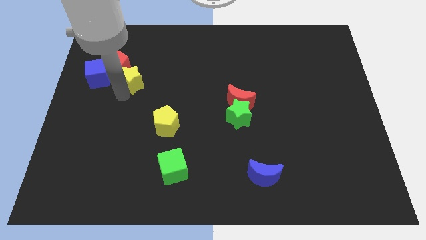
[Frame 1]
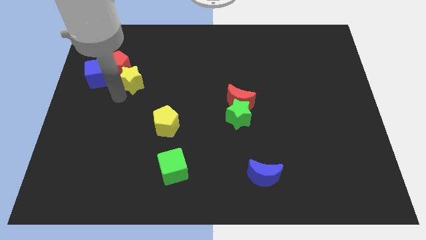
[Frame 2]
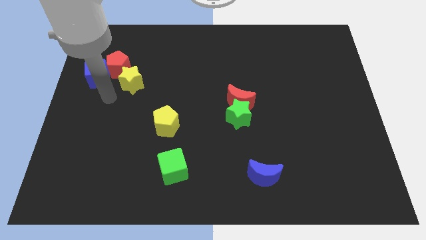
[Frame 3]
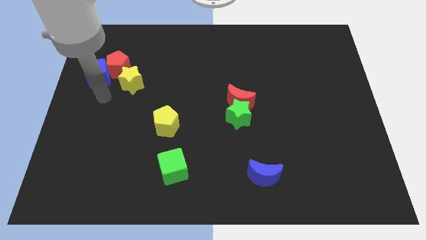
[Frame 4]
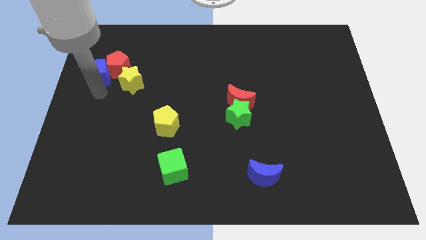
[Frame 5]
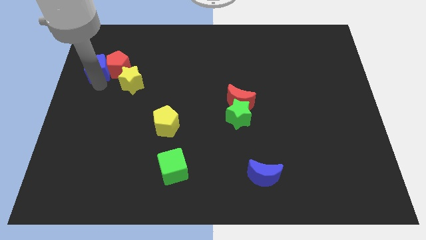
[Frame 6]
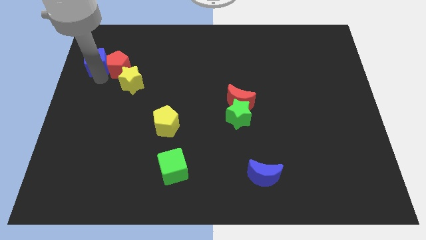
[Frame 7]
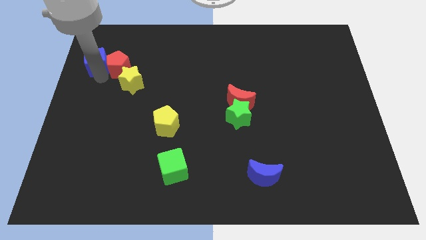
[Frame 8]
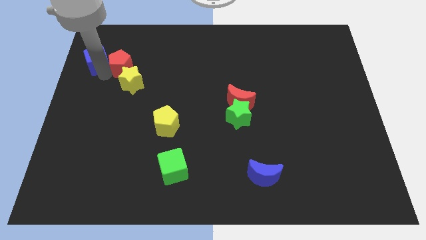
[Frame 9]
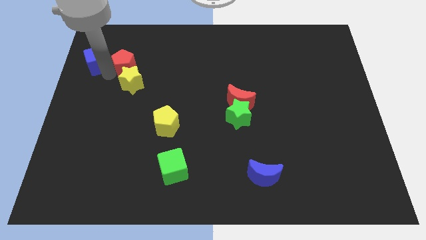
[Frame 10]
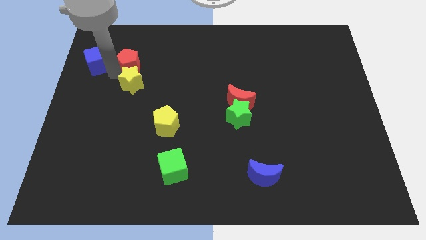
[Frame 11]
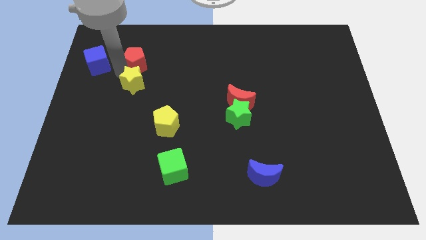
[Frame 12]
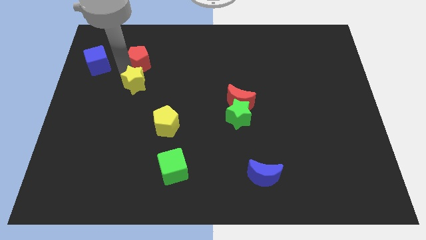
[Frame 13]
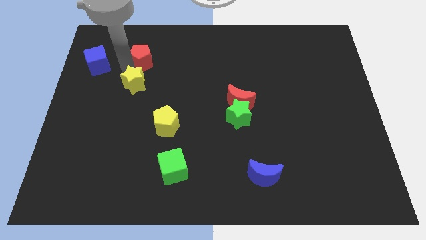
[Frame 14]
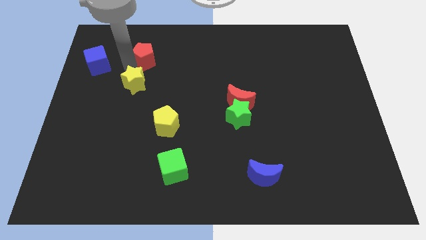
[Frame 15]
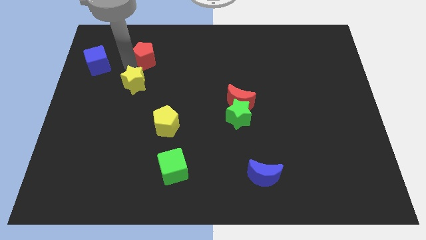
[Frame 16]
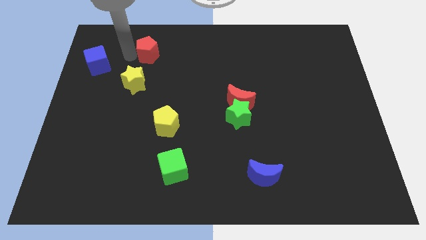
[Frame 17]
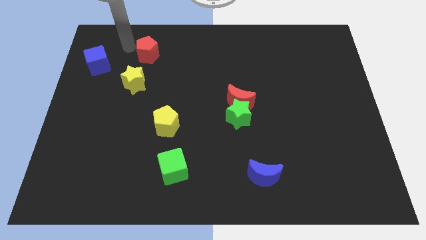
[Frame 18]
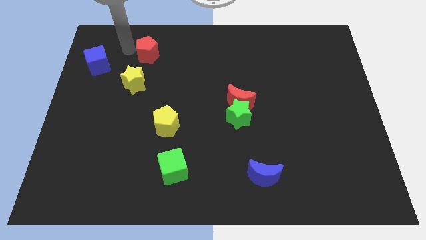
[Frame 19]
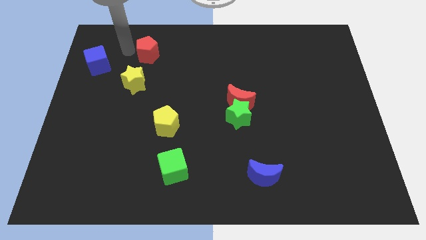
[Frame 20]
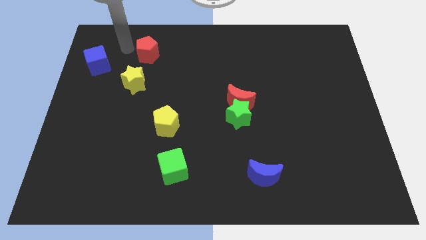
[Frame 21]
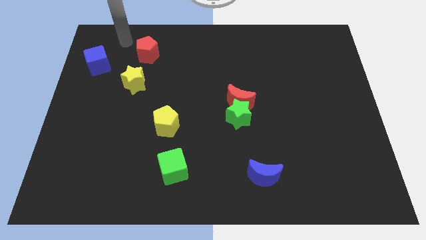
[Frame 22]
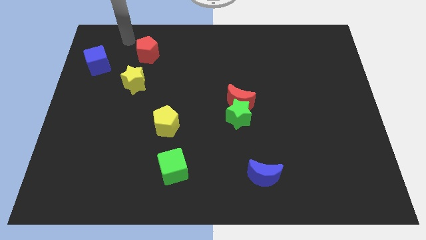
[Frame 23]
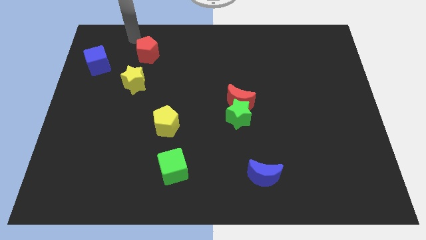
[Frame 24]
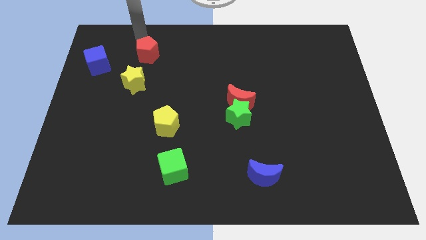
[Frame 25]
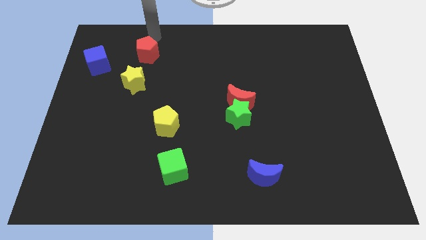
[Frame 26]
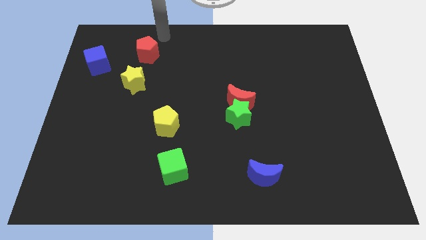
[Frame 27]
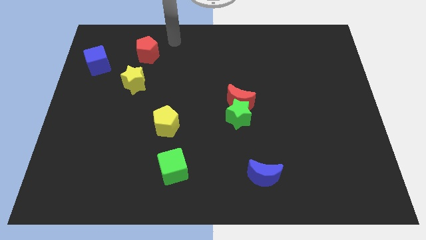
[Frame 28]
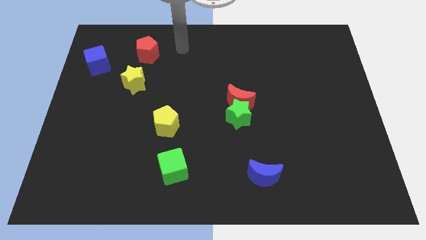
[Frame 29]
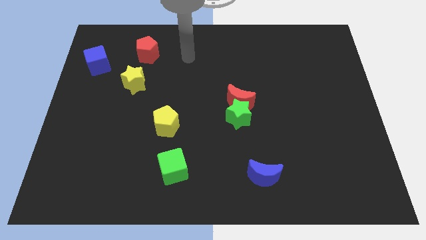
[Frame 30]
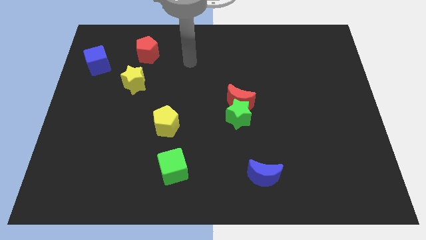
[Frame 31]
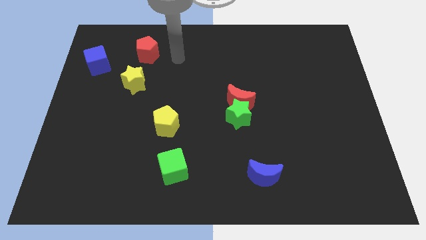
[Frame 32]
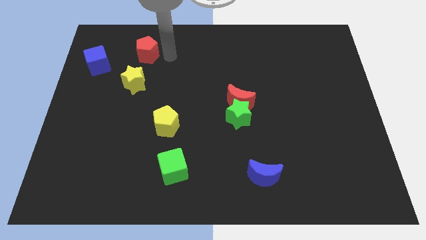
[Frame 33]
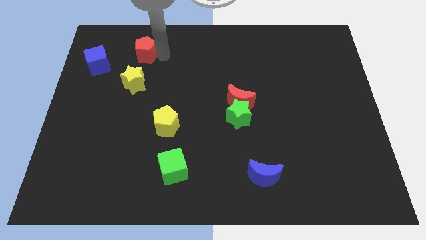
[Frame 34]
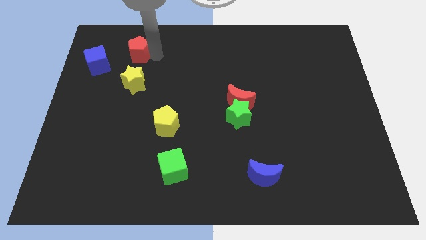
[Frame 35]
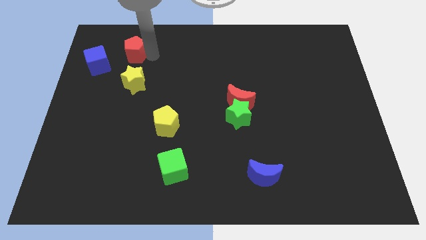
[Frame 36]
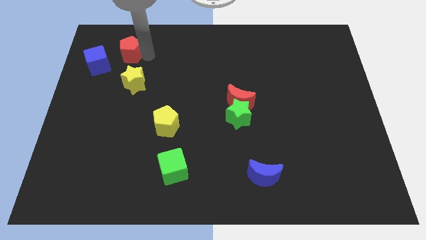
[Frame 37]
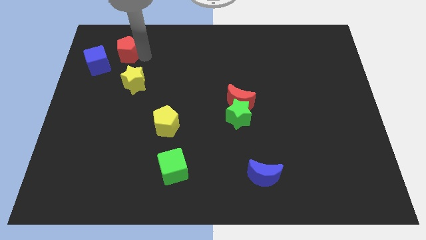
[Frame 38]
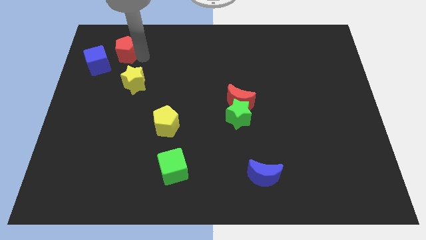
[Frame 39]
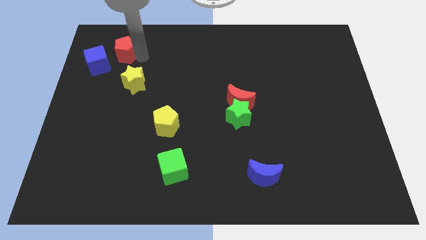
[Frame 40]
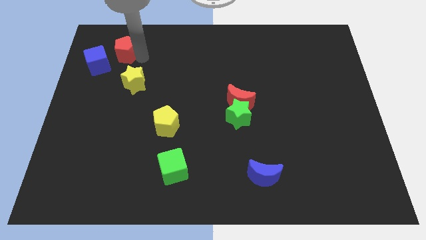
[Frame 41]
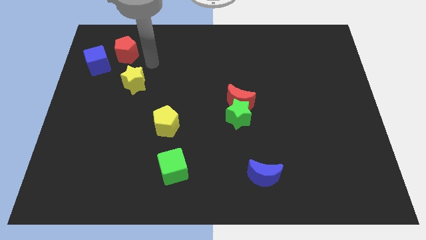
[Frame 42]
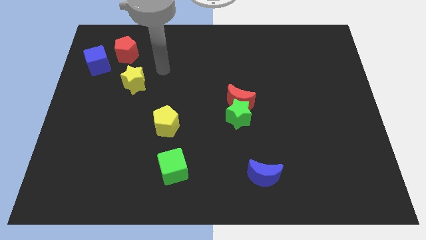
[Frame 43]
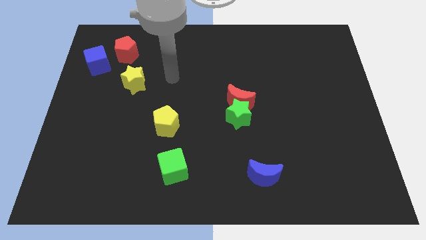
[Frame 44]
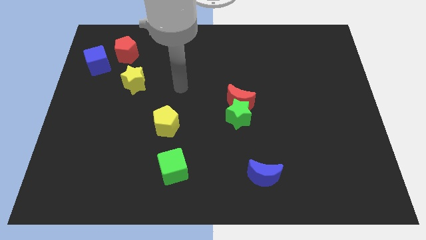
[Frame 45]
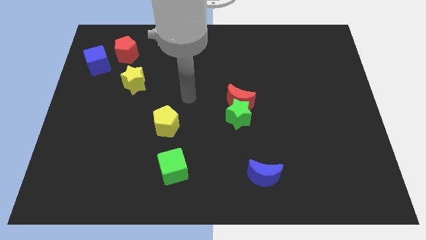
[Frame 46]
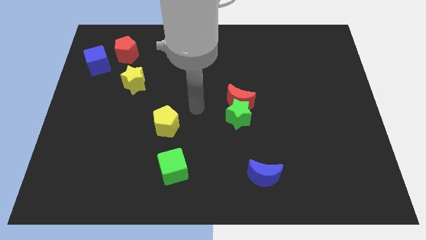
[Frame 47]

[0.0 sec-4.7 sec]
push the red pentagon to the right of the blue cube

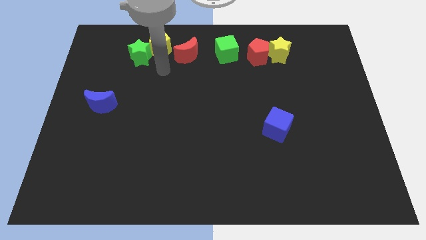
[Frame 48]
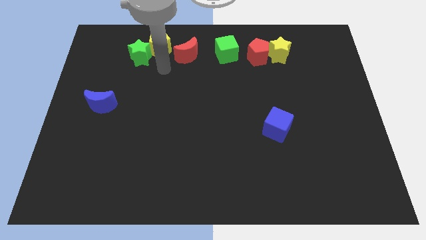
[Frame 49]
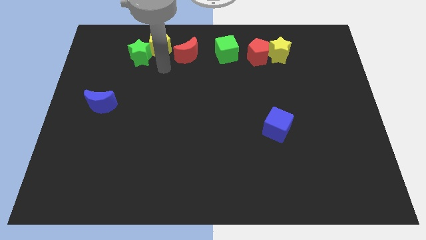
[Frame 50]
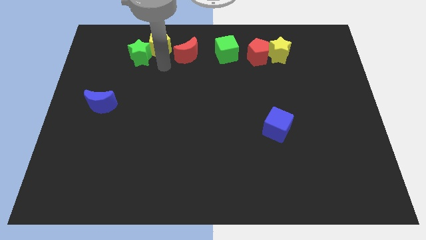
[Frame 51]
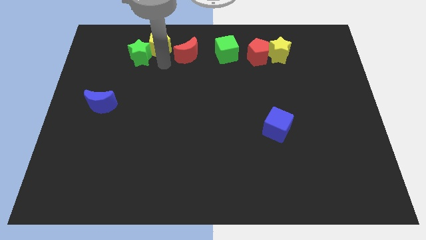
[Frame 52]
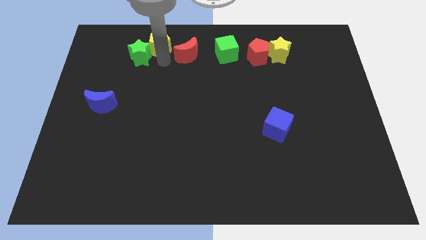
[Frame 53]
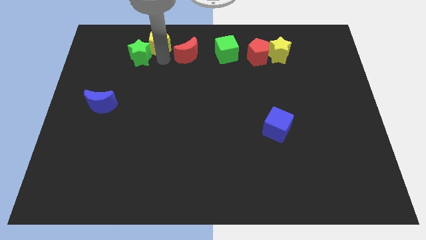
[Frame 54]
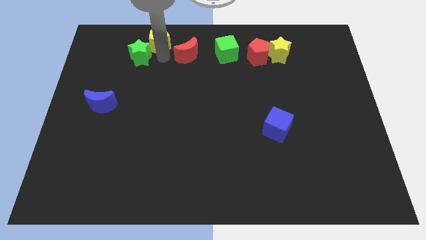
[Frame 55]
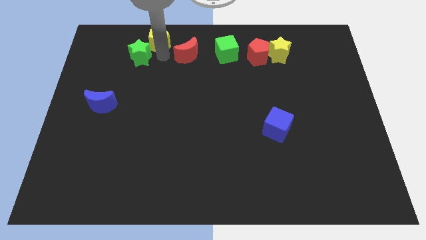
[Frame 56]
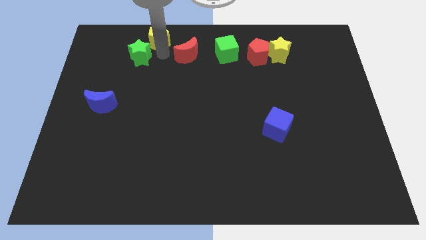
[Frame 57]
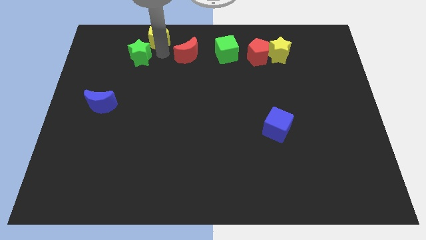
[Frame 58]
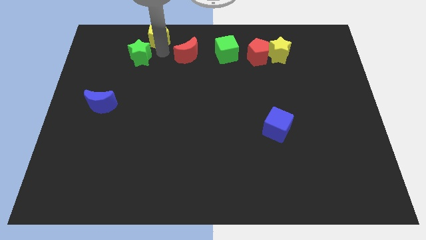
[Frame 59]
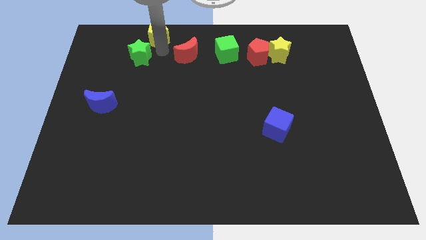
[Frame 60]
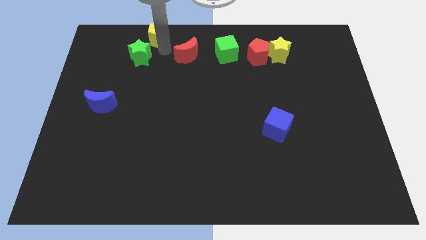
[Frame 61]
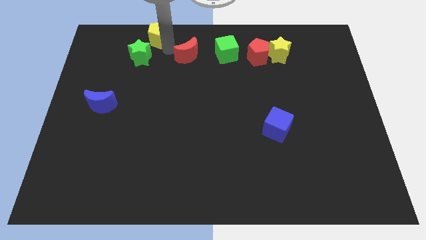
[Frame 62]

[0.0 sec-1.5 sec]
push the yellow pentagon a bit upwards

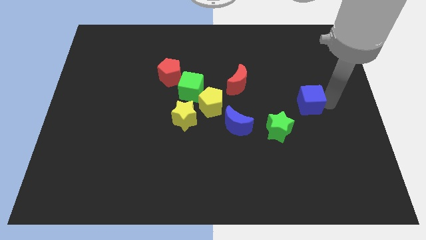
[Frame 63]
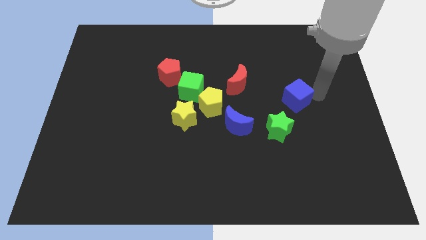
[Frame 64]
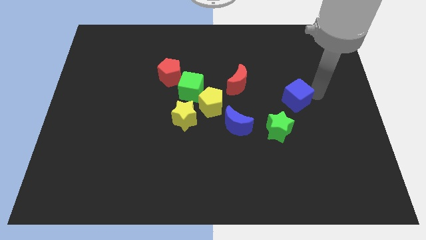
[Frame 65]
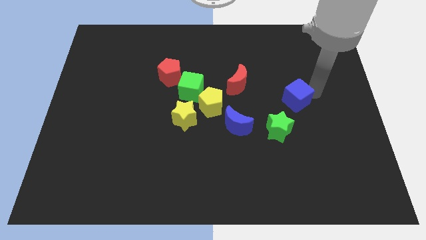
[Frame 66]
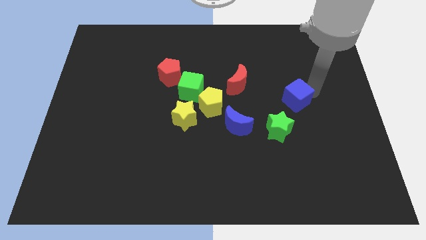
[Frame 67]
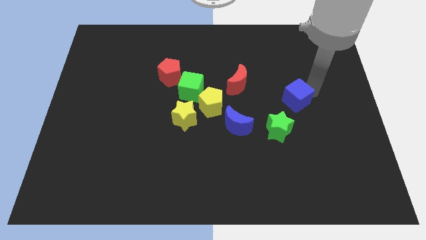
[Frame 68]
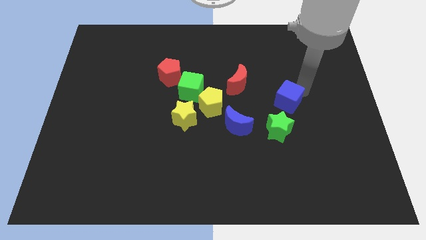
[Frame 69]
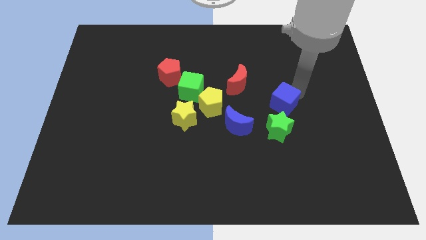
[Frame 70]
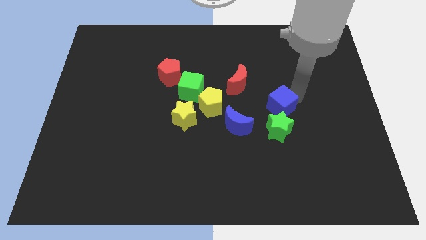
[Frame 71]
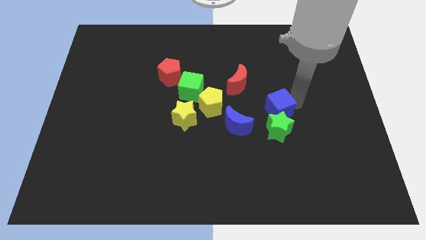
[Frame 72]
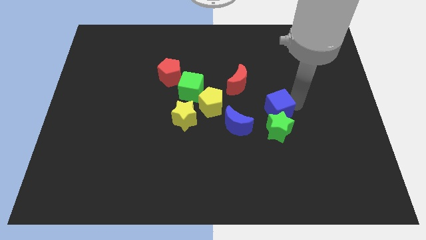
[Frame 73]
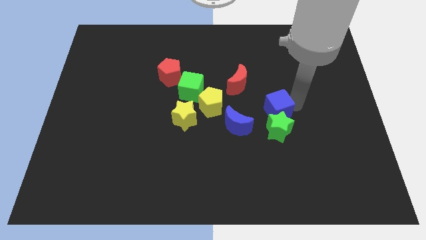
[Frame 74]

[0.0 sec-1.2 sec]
slide the blue cube to the top of the green star

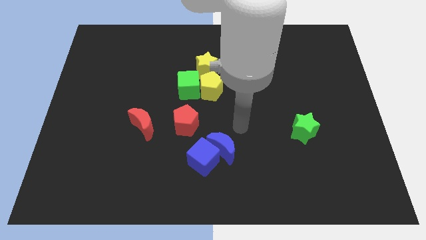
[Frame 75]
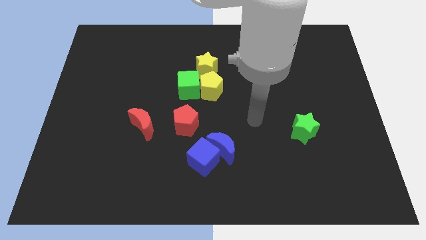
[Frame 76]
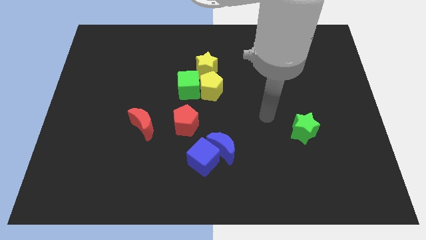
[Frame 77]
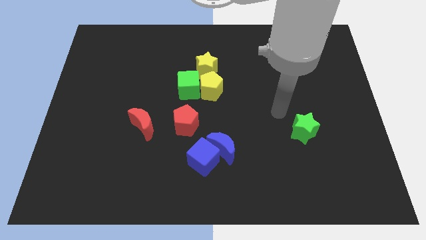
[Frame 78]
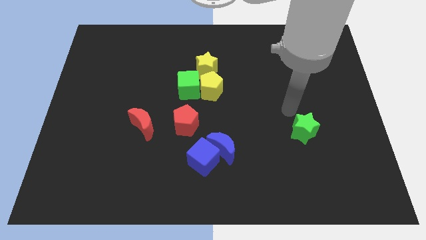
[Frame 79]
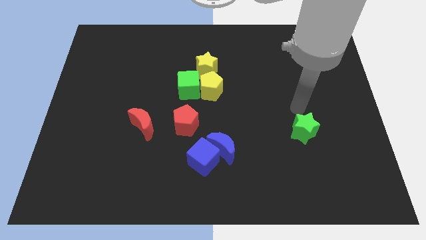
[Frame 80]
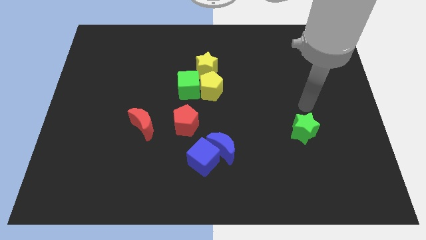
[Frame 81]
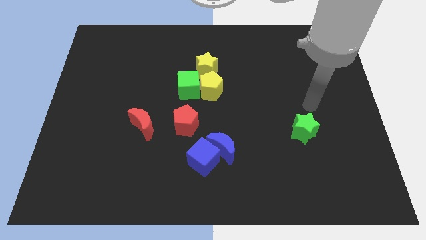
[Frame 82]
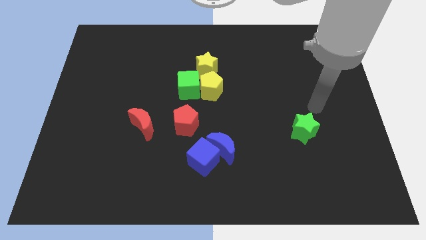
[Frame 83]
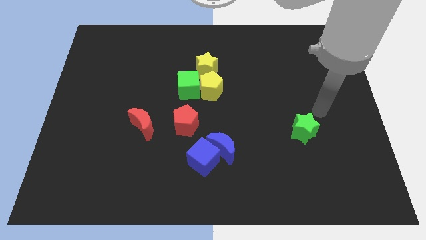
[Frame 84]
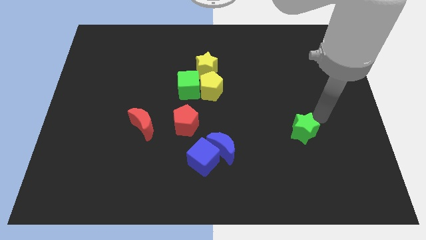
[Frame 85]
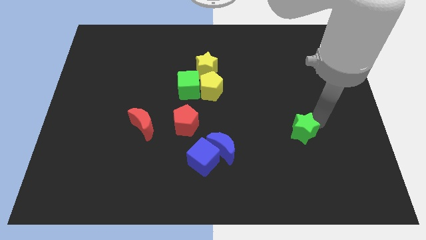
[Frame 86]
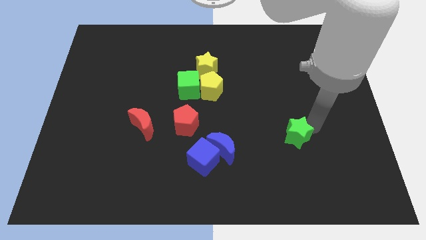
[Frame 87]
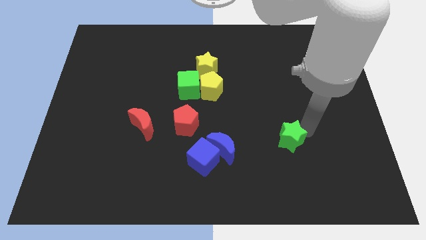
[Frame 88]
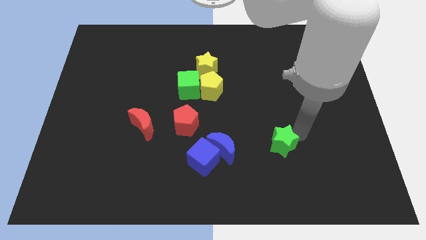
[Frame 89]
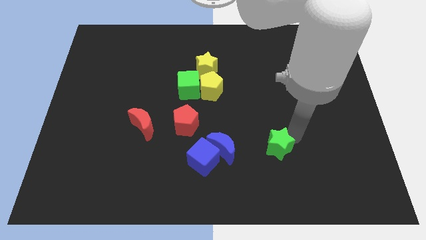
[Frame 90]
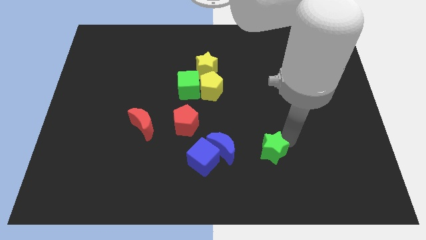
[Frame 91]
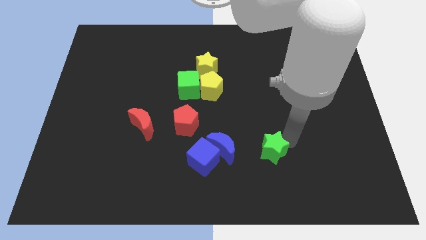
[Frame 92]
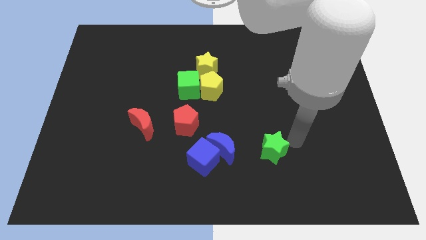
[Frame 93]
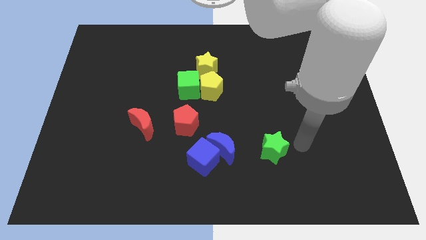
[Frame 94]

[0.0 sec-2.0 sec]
move the green star diagonal to the right of the blue crescent
